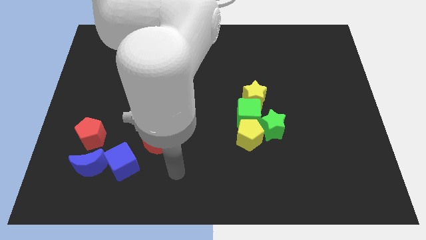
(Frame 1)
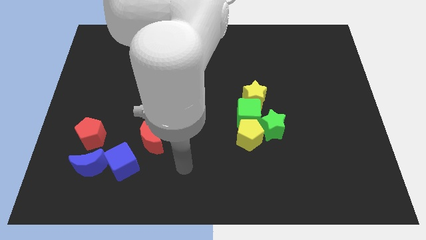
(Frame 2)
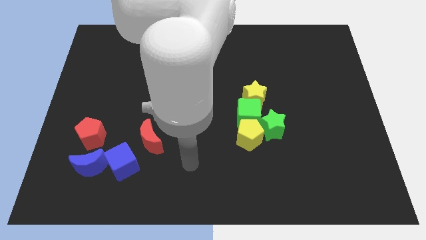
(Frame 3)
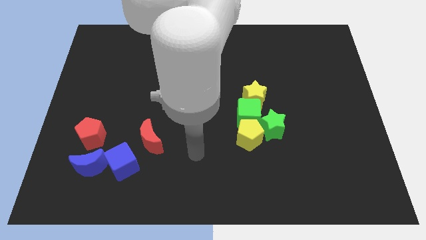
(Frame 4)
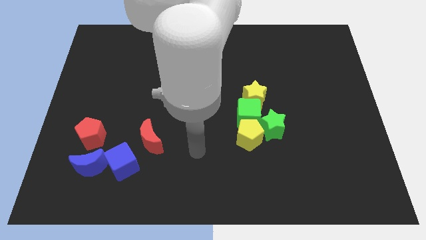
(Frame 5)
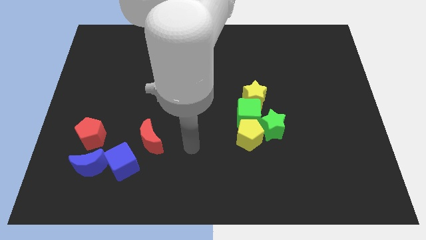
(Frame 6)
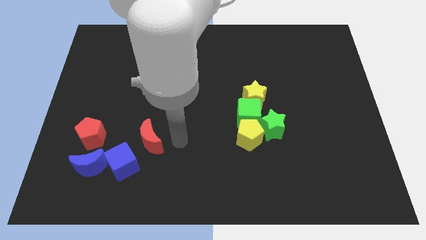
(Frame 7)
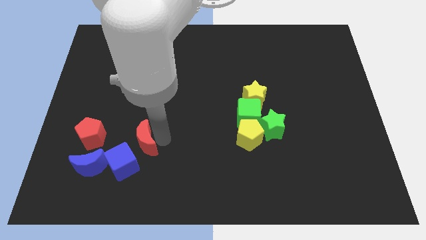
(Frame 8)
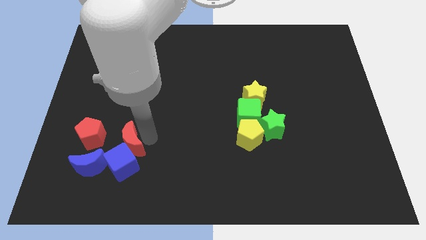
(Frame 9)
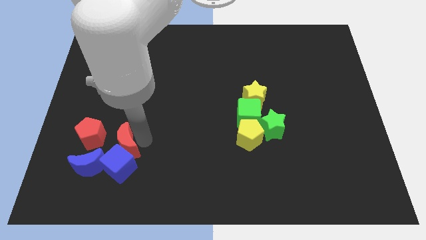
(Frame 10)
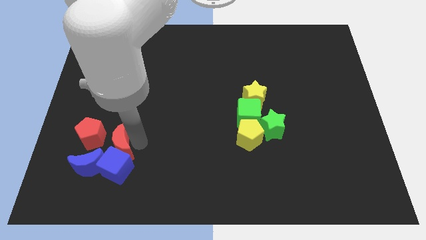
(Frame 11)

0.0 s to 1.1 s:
place red moon on top of blue cube

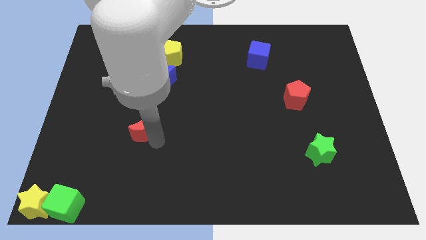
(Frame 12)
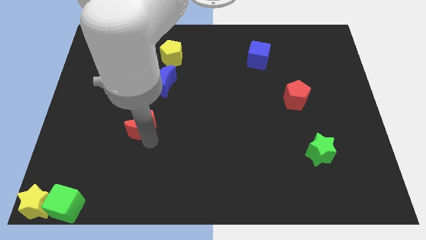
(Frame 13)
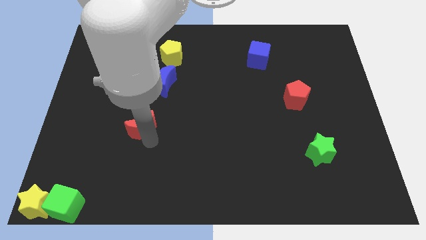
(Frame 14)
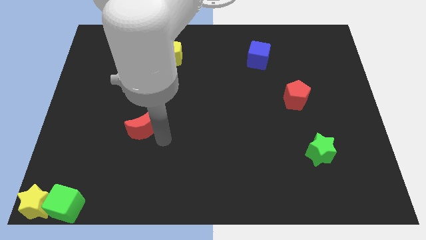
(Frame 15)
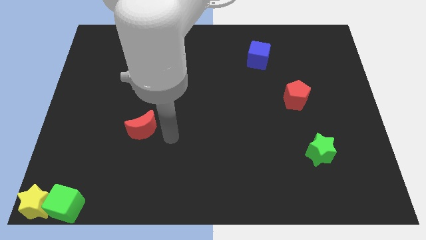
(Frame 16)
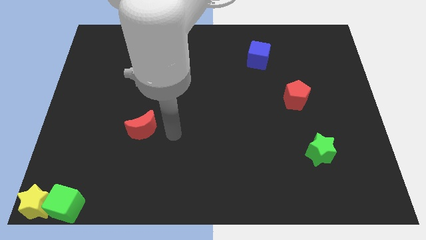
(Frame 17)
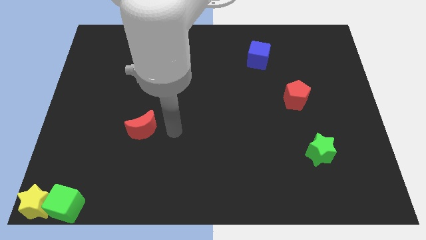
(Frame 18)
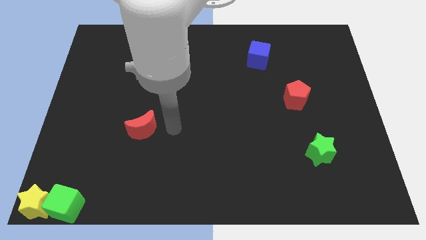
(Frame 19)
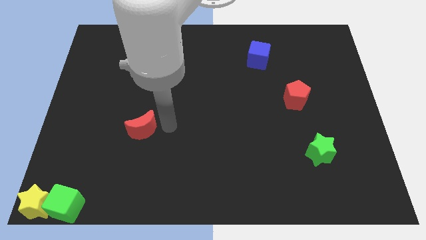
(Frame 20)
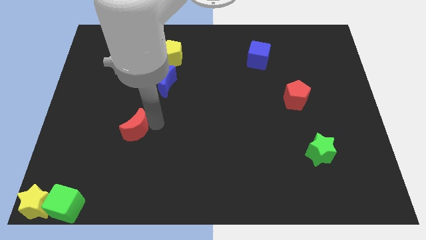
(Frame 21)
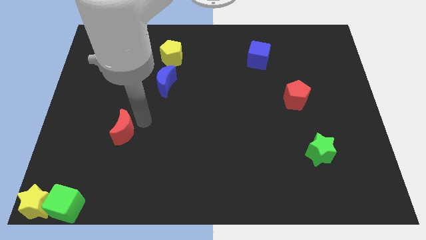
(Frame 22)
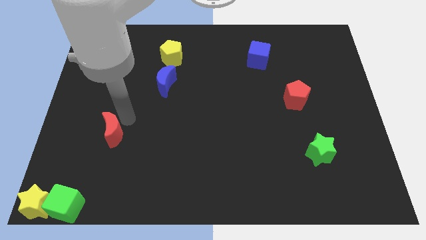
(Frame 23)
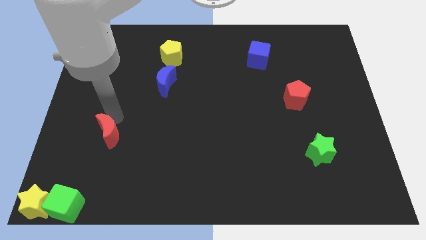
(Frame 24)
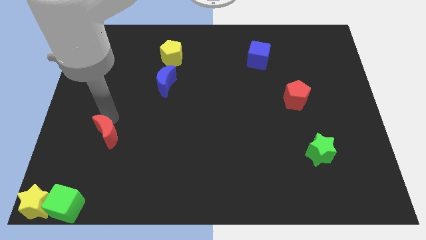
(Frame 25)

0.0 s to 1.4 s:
move red crescent to the left

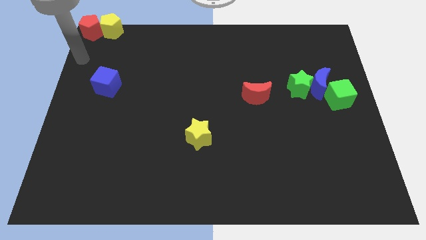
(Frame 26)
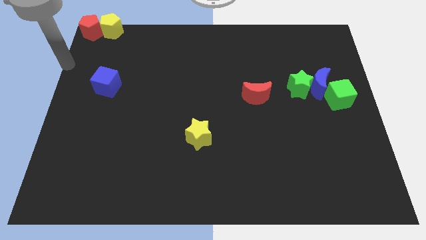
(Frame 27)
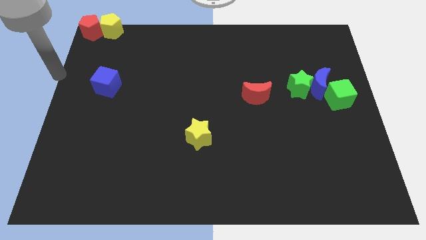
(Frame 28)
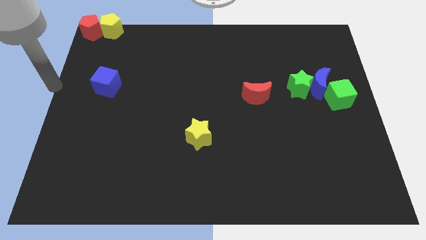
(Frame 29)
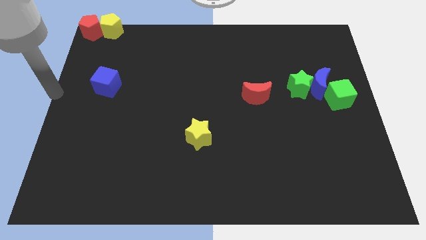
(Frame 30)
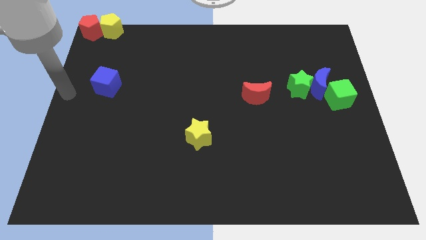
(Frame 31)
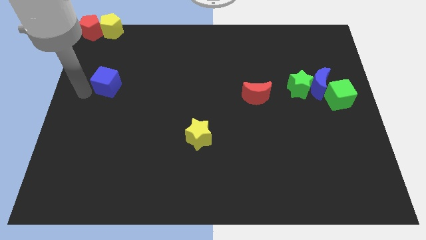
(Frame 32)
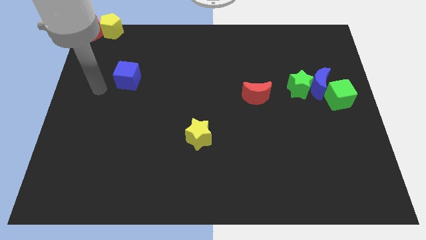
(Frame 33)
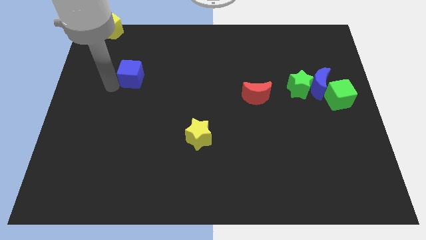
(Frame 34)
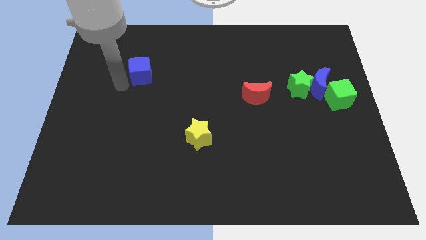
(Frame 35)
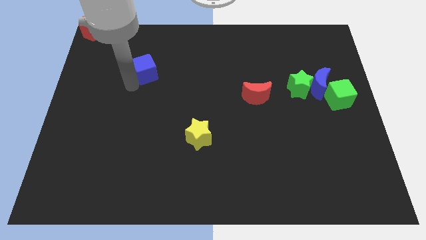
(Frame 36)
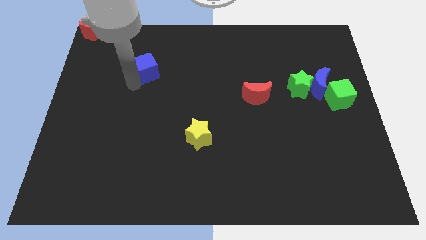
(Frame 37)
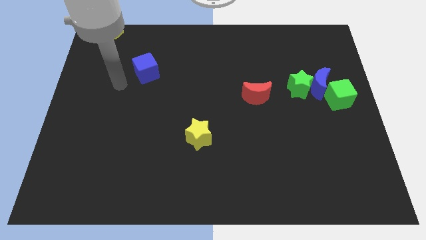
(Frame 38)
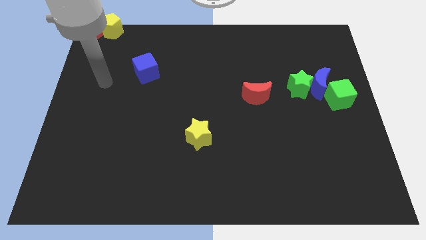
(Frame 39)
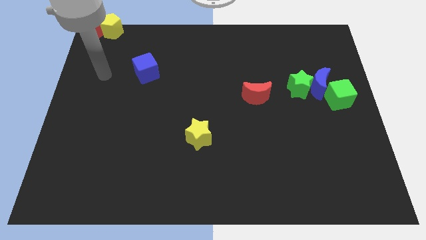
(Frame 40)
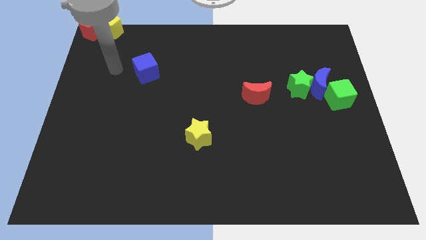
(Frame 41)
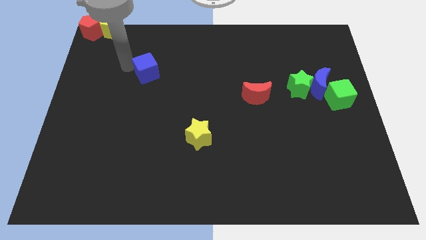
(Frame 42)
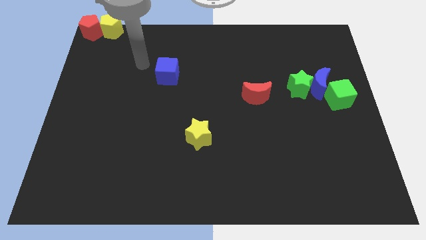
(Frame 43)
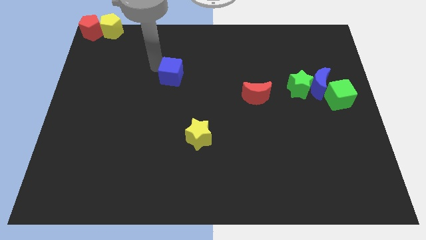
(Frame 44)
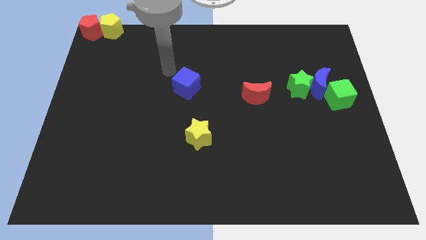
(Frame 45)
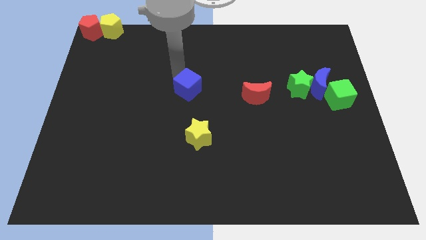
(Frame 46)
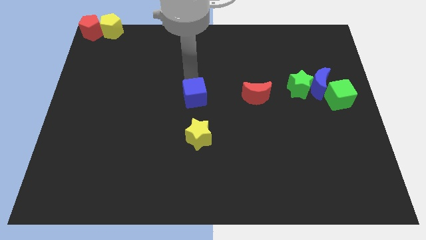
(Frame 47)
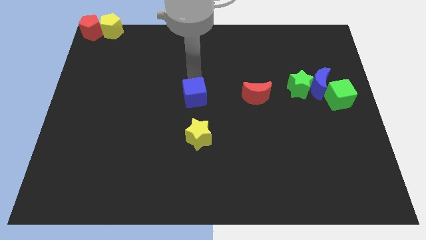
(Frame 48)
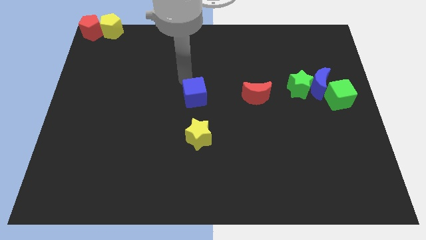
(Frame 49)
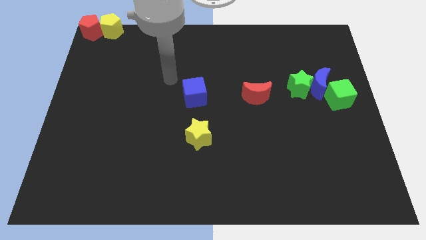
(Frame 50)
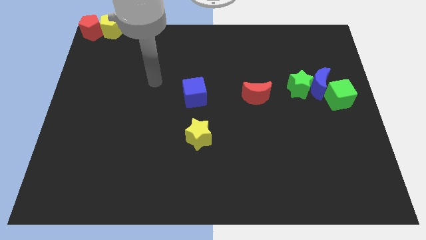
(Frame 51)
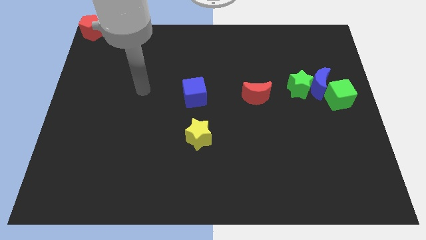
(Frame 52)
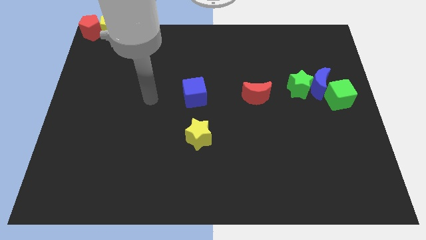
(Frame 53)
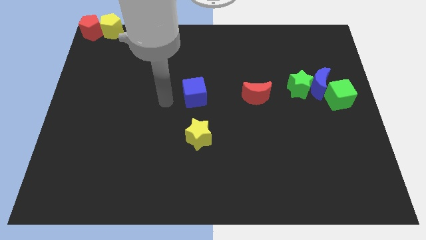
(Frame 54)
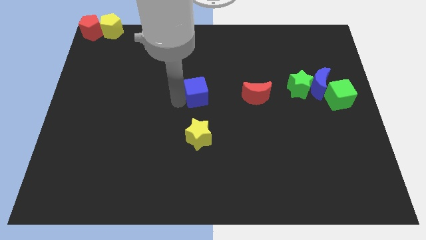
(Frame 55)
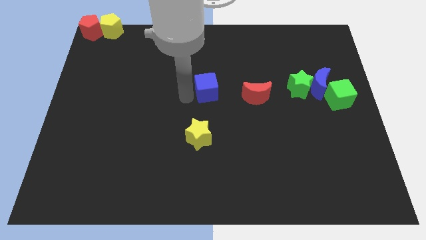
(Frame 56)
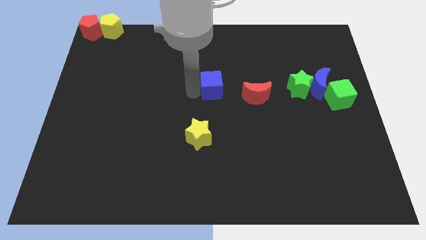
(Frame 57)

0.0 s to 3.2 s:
place a blue cube to the top of the yellow star

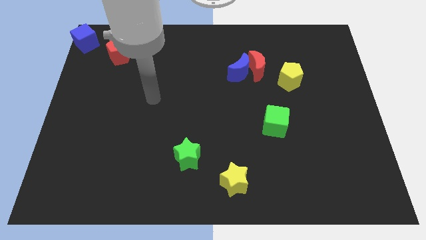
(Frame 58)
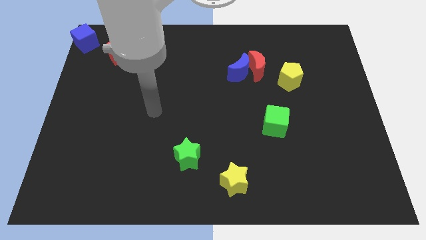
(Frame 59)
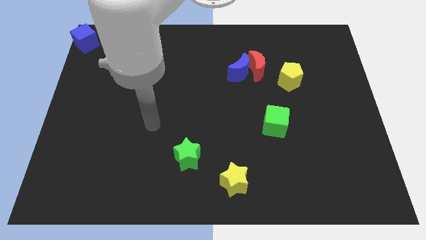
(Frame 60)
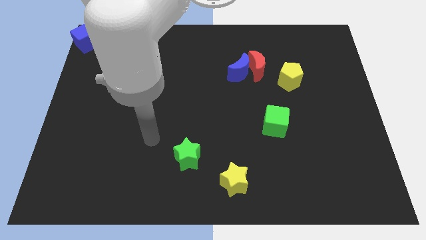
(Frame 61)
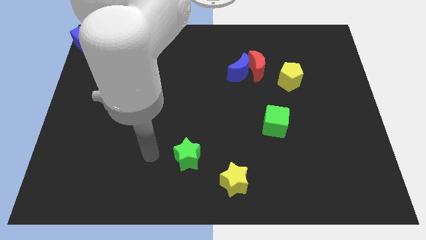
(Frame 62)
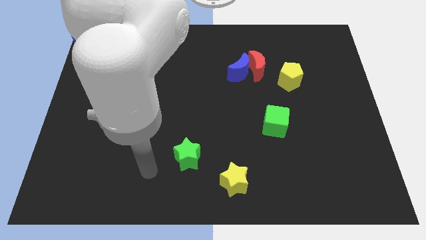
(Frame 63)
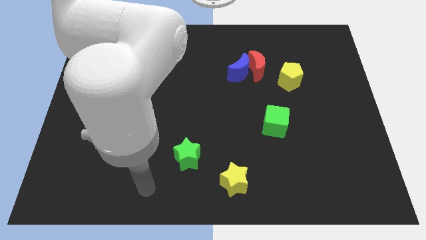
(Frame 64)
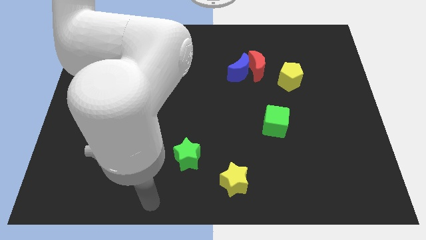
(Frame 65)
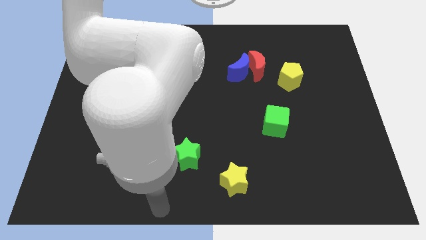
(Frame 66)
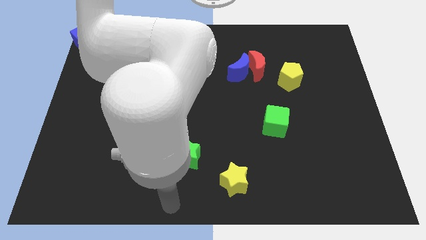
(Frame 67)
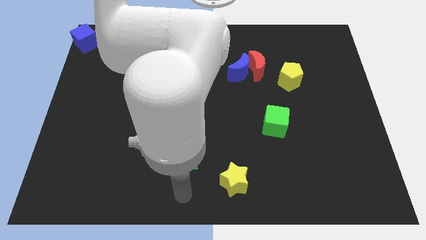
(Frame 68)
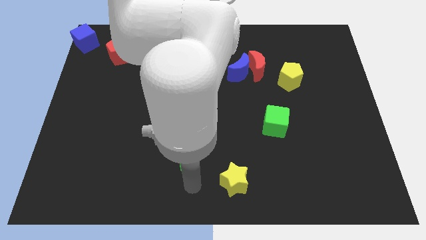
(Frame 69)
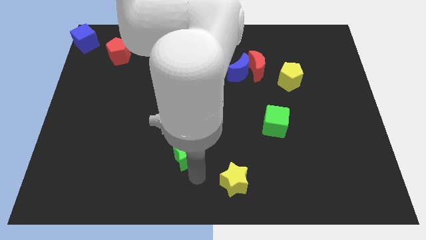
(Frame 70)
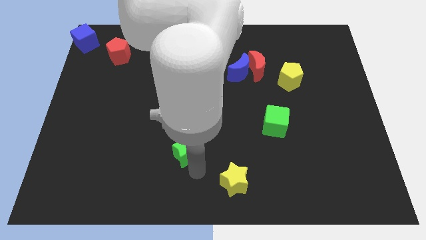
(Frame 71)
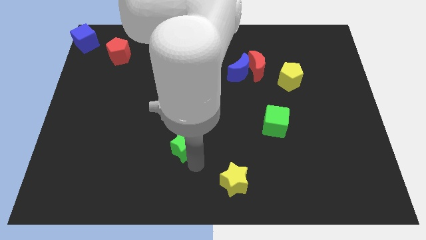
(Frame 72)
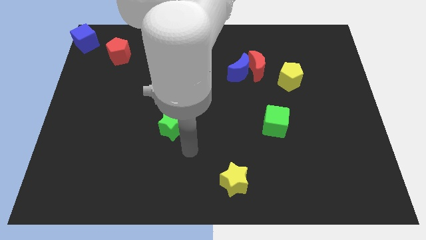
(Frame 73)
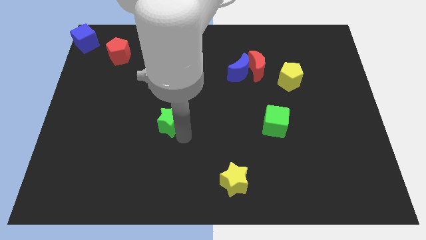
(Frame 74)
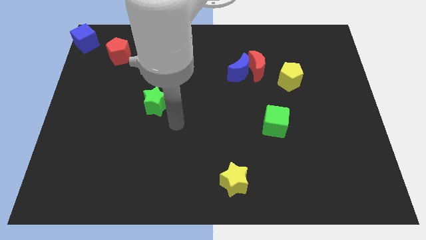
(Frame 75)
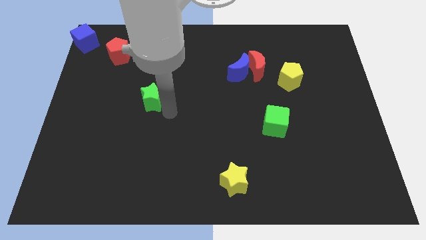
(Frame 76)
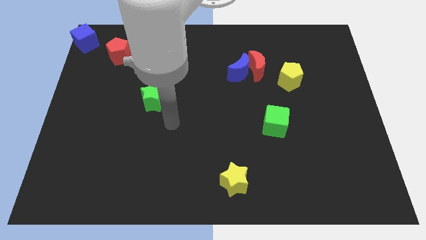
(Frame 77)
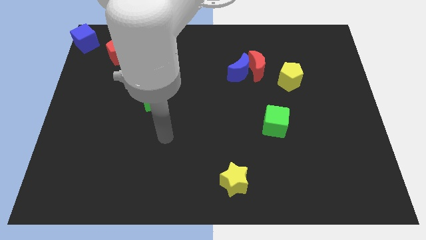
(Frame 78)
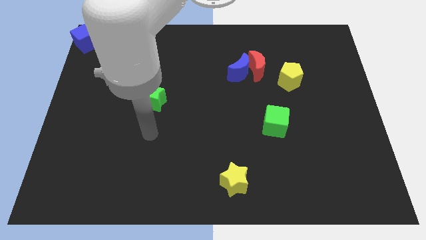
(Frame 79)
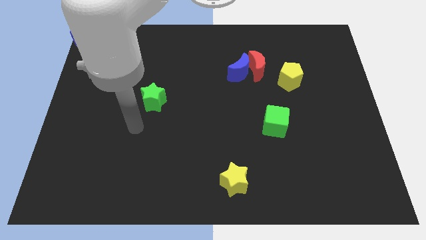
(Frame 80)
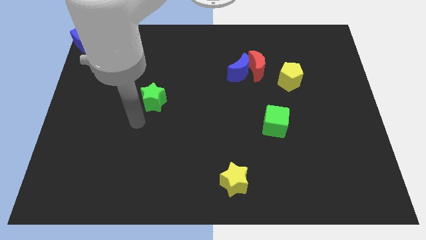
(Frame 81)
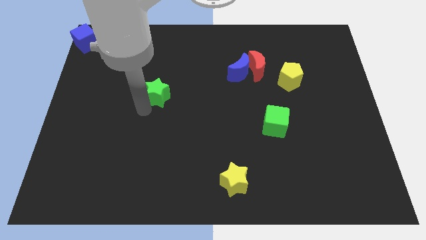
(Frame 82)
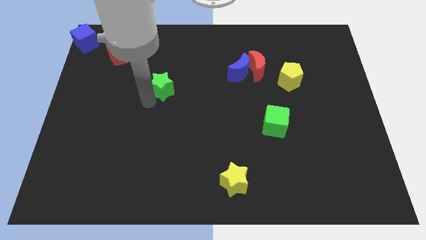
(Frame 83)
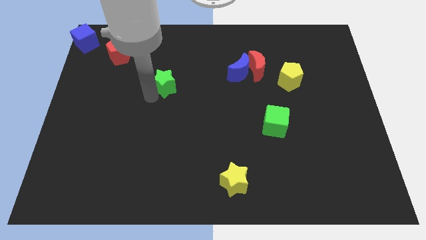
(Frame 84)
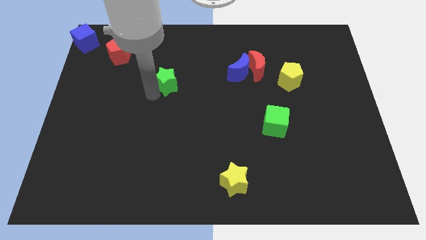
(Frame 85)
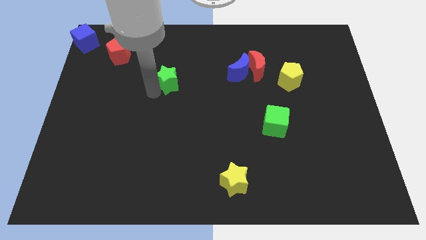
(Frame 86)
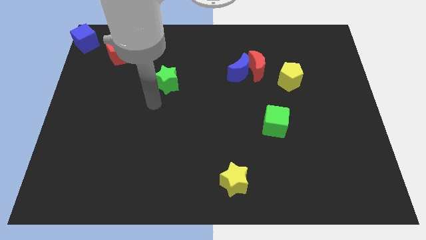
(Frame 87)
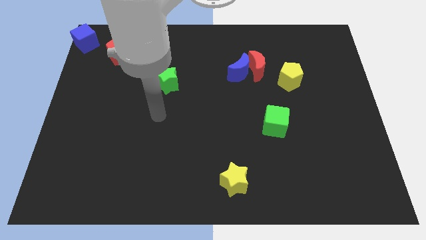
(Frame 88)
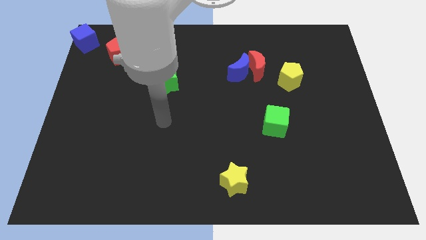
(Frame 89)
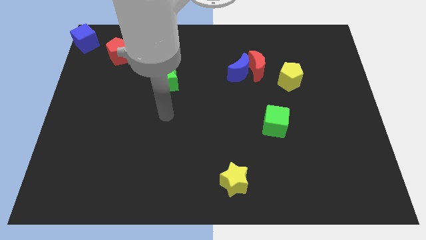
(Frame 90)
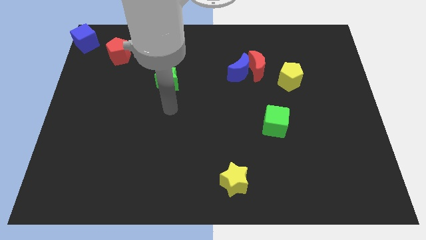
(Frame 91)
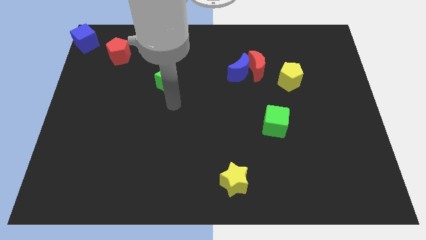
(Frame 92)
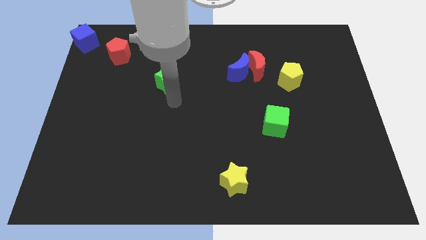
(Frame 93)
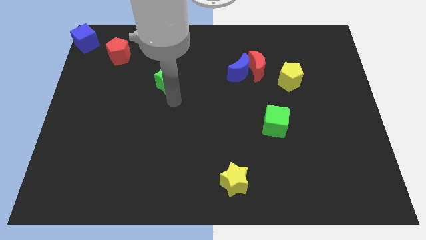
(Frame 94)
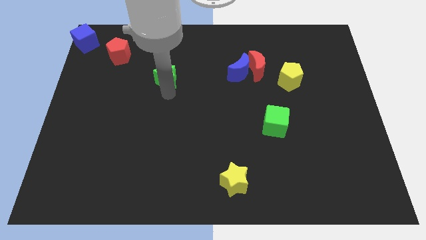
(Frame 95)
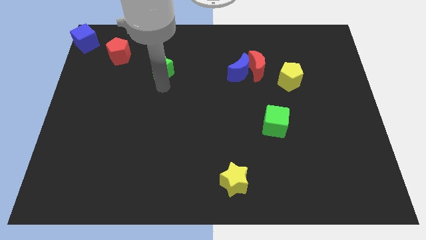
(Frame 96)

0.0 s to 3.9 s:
push the green star to the top of the board
